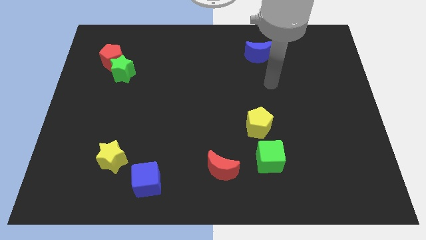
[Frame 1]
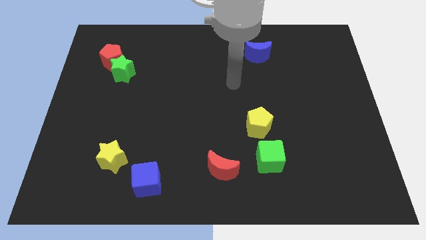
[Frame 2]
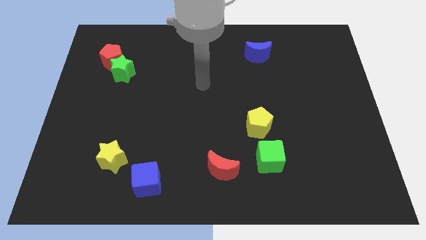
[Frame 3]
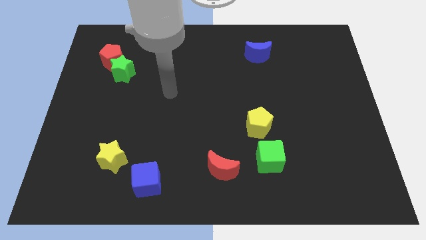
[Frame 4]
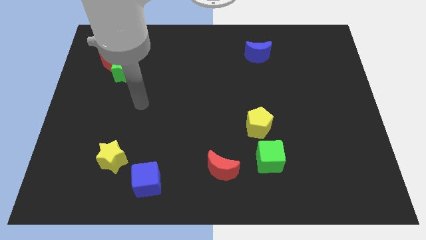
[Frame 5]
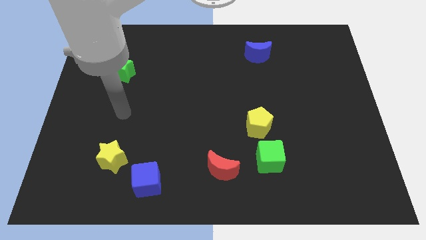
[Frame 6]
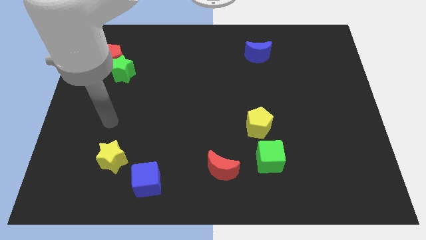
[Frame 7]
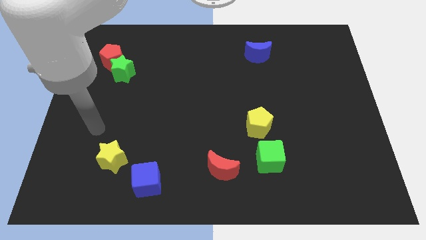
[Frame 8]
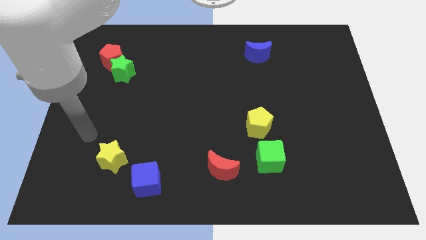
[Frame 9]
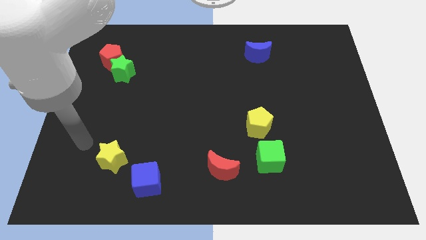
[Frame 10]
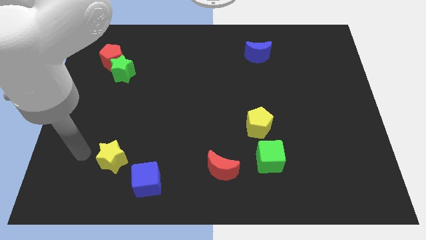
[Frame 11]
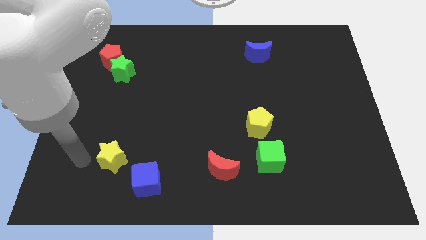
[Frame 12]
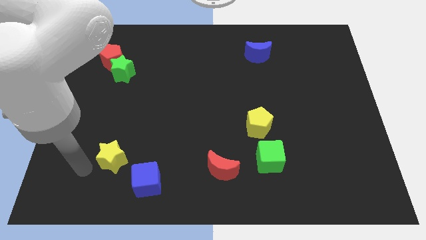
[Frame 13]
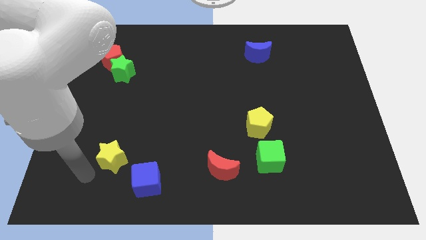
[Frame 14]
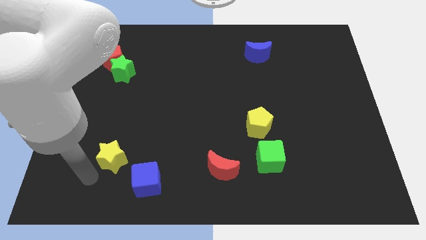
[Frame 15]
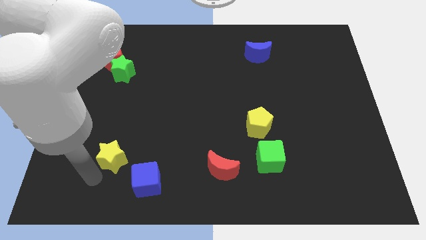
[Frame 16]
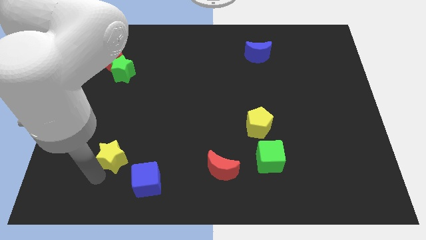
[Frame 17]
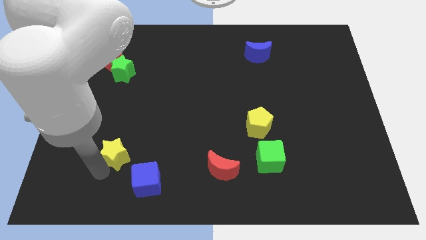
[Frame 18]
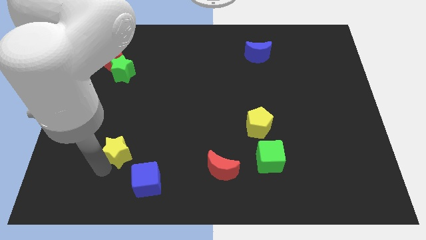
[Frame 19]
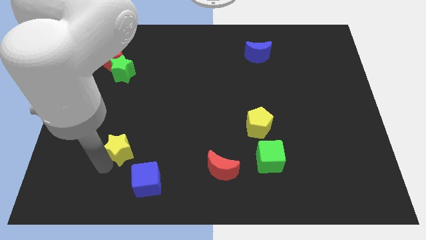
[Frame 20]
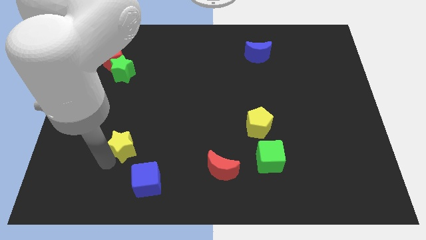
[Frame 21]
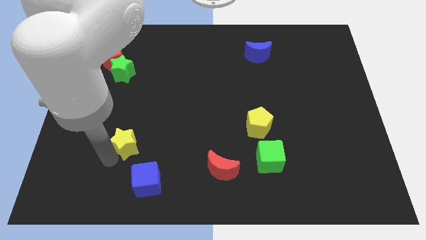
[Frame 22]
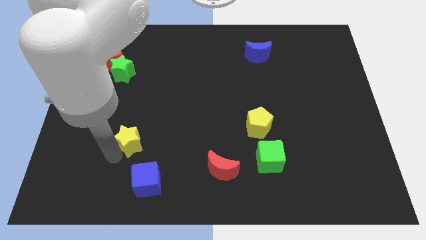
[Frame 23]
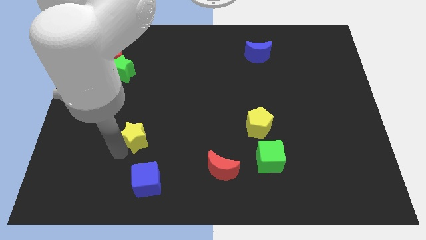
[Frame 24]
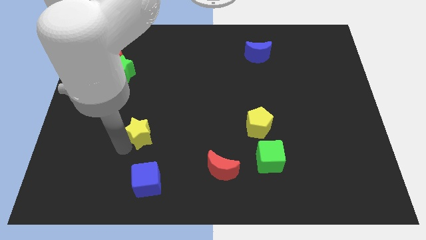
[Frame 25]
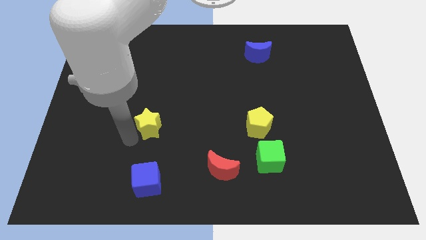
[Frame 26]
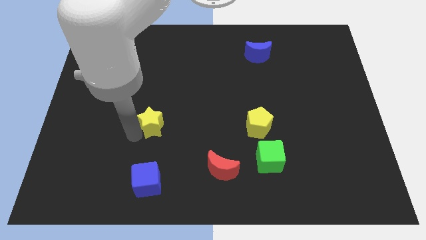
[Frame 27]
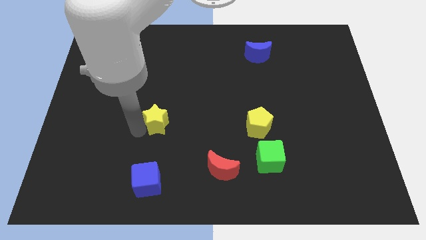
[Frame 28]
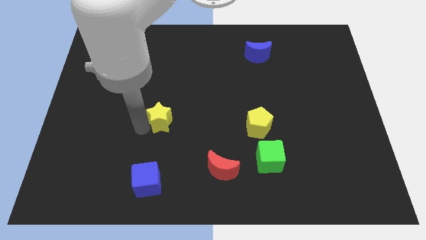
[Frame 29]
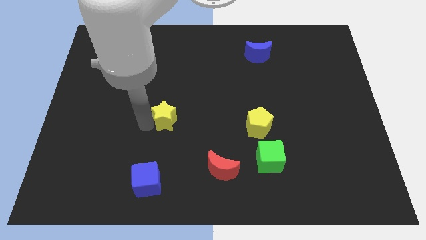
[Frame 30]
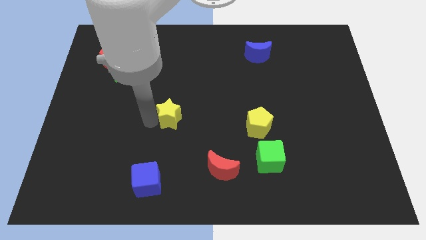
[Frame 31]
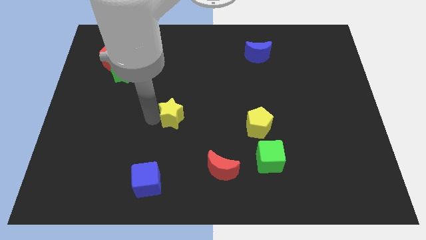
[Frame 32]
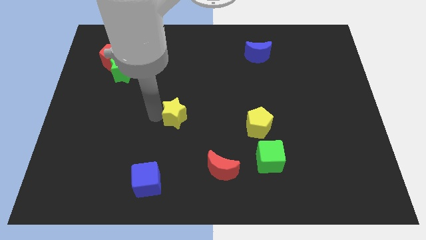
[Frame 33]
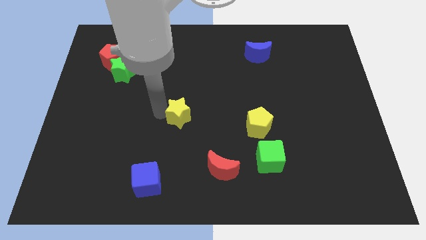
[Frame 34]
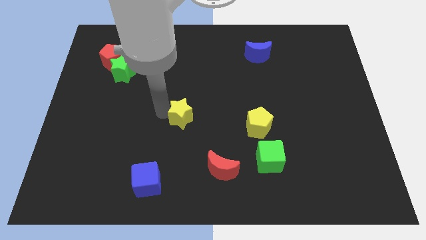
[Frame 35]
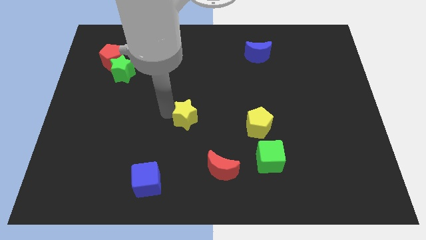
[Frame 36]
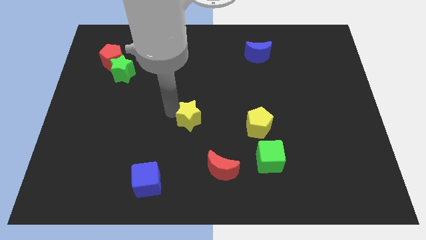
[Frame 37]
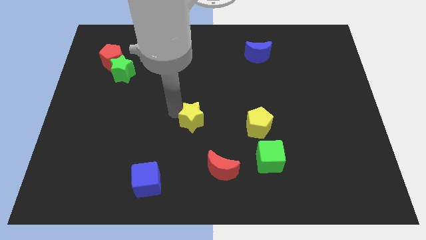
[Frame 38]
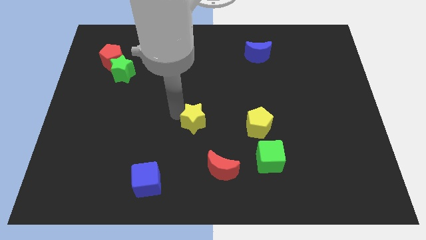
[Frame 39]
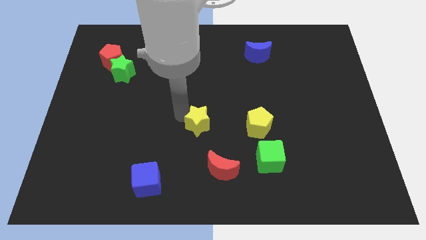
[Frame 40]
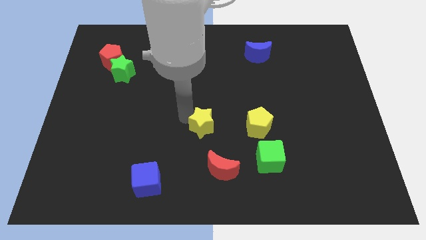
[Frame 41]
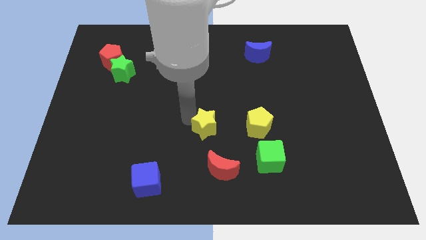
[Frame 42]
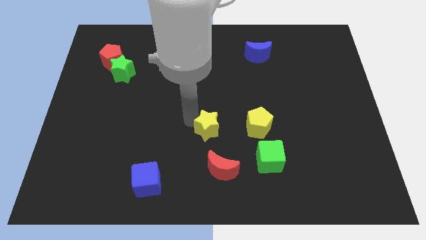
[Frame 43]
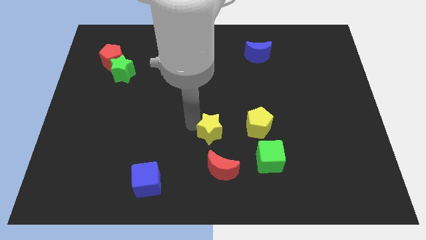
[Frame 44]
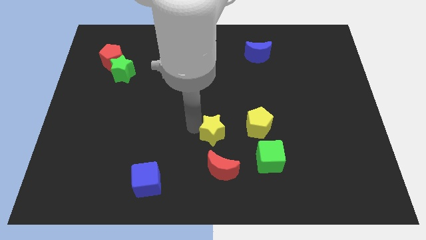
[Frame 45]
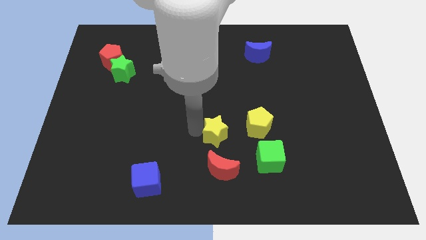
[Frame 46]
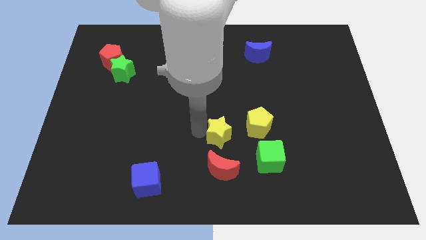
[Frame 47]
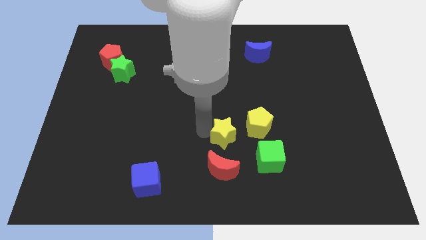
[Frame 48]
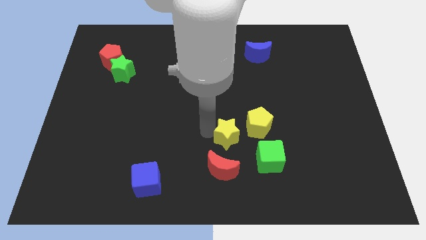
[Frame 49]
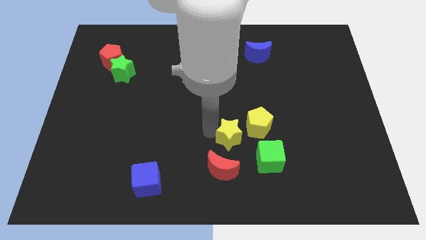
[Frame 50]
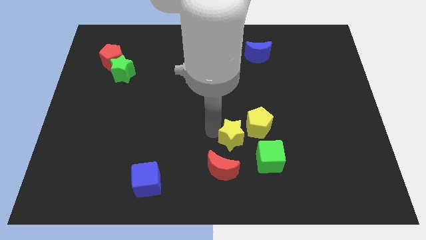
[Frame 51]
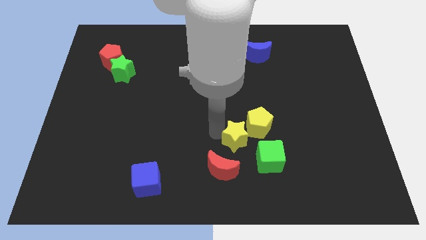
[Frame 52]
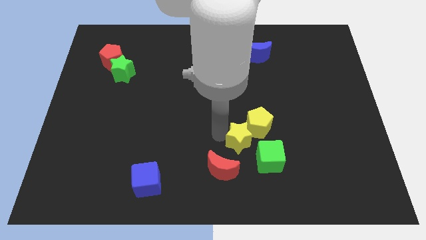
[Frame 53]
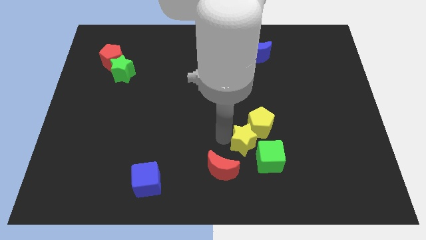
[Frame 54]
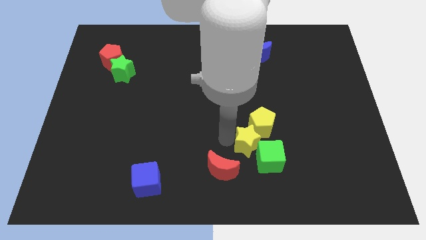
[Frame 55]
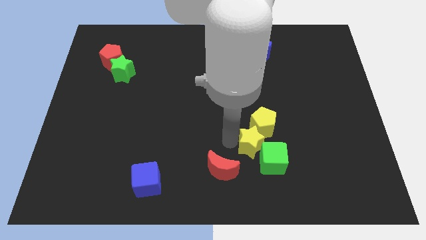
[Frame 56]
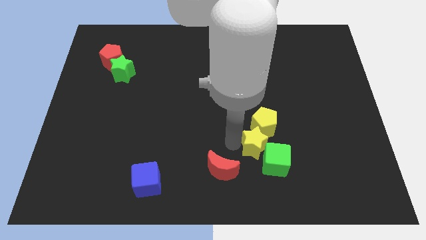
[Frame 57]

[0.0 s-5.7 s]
put the yellow star towards the green cube

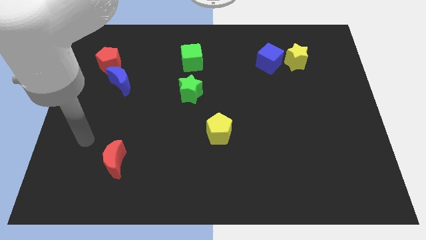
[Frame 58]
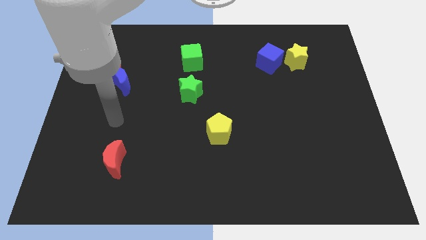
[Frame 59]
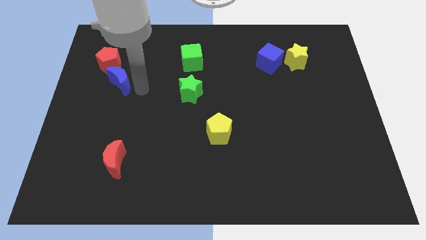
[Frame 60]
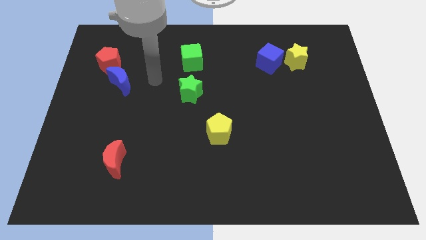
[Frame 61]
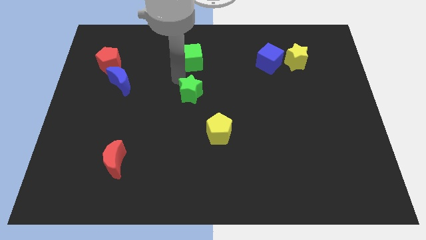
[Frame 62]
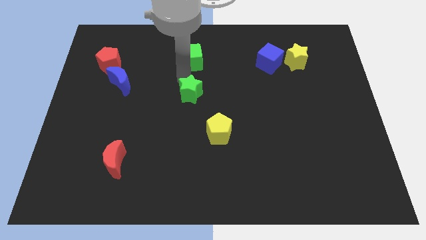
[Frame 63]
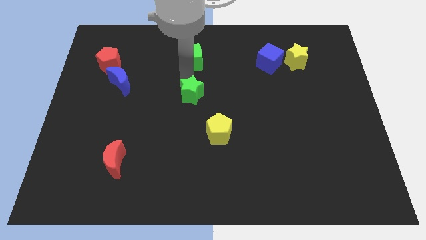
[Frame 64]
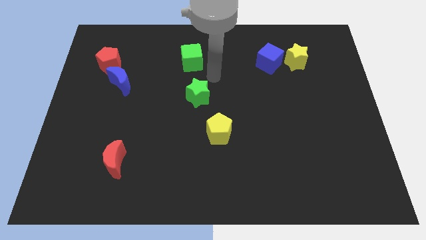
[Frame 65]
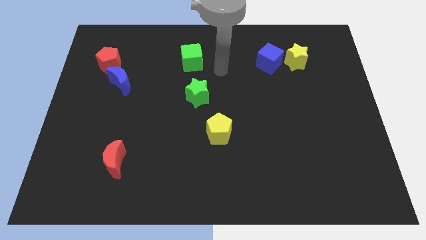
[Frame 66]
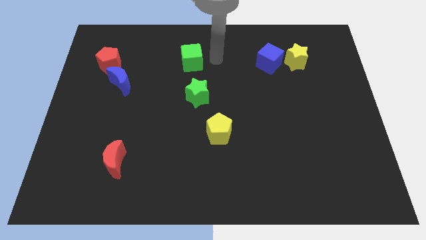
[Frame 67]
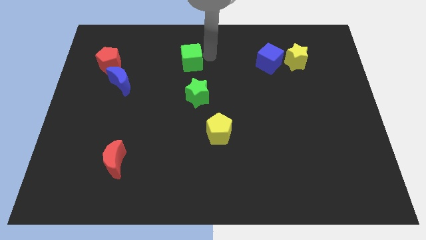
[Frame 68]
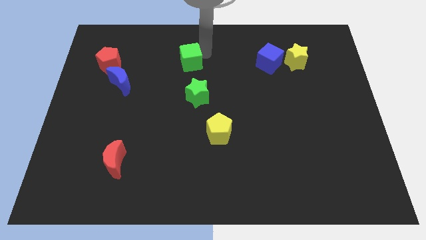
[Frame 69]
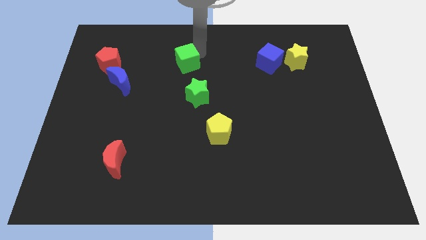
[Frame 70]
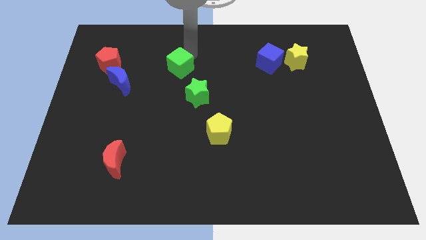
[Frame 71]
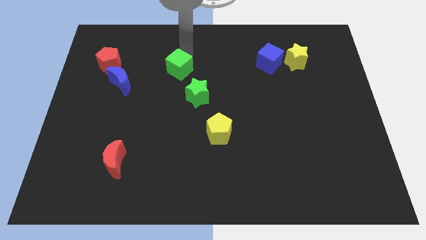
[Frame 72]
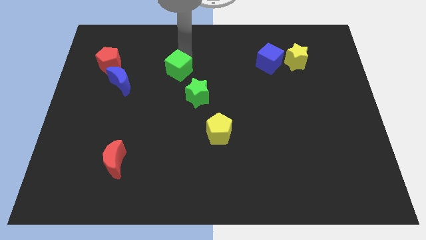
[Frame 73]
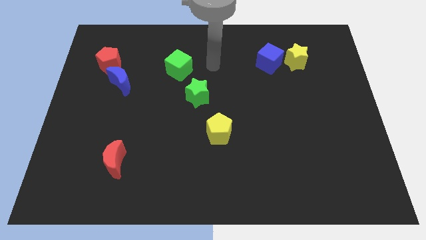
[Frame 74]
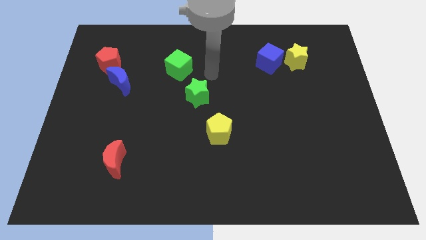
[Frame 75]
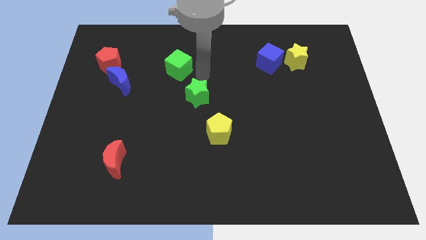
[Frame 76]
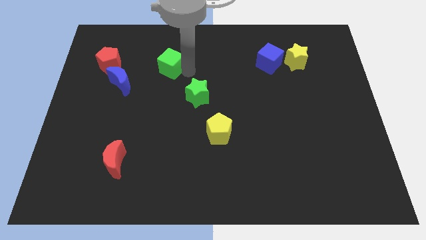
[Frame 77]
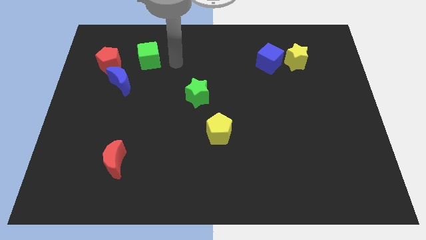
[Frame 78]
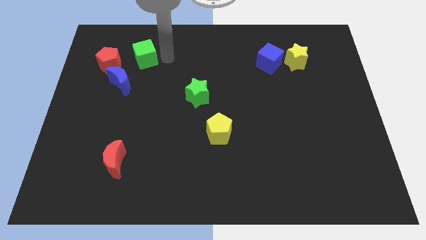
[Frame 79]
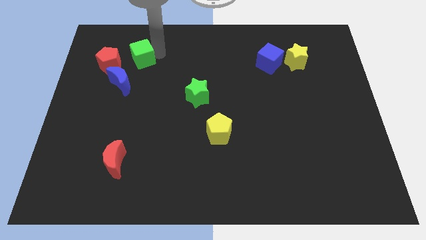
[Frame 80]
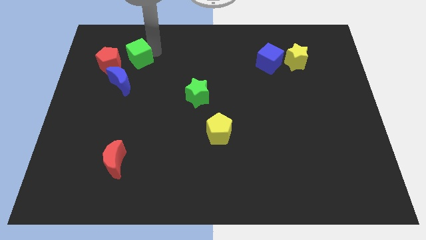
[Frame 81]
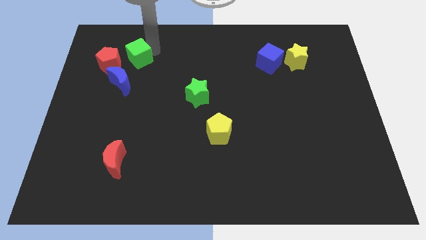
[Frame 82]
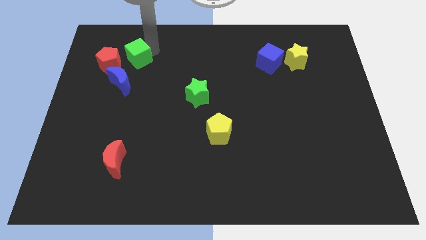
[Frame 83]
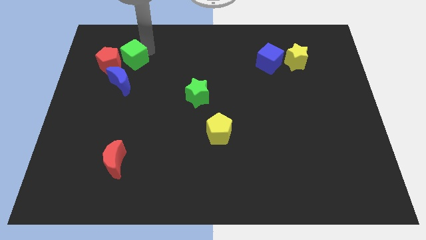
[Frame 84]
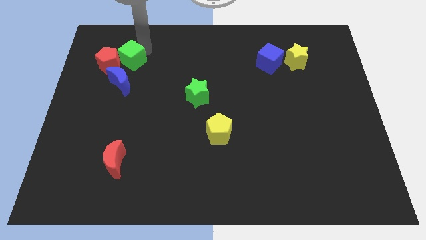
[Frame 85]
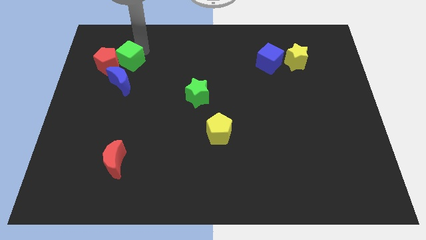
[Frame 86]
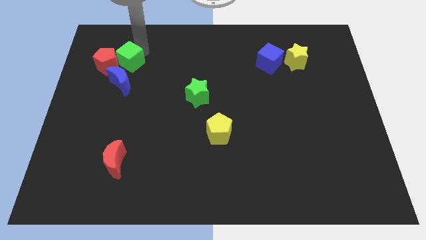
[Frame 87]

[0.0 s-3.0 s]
move the green cube towards the red pentagon
